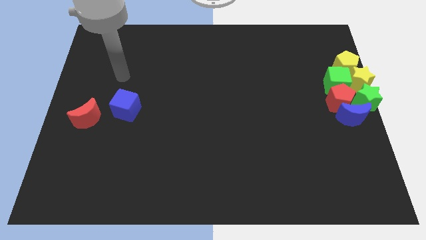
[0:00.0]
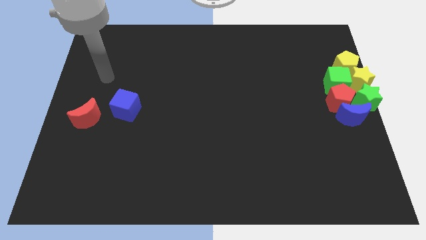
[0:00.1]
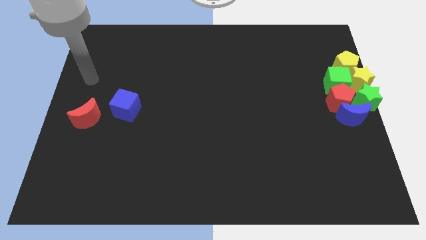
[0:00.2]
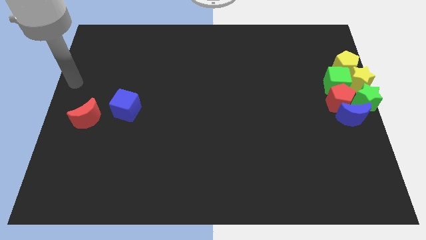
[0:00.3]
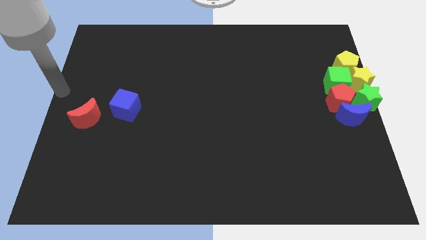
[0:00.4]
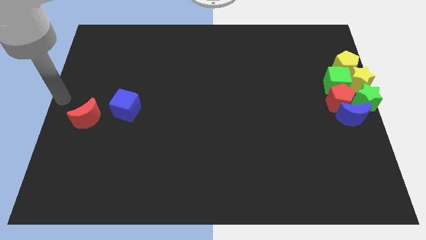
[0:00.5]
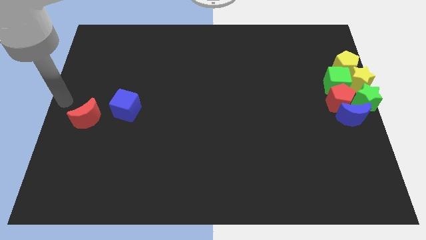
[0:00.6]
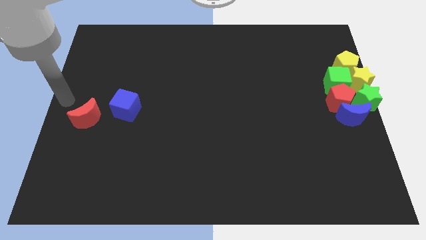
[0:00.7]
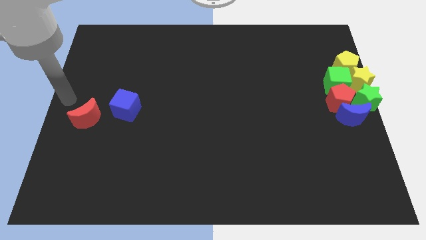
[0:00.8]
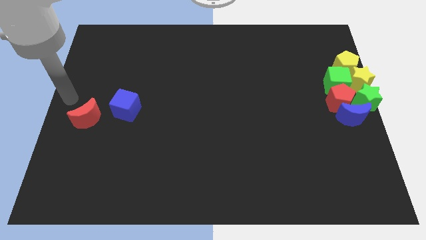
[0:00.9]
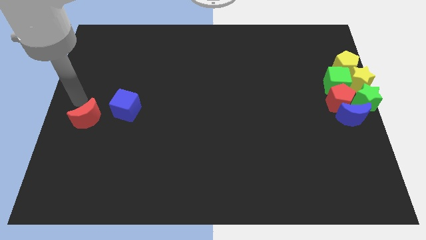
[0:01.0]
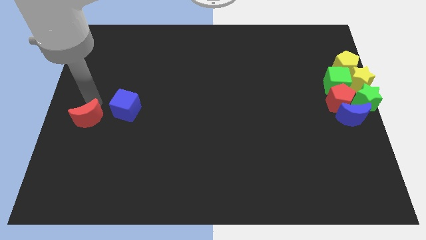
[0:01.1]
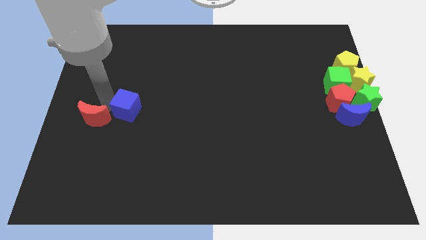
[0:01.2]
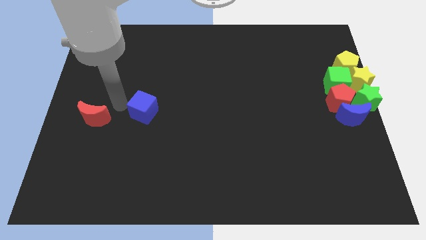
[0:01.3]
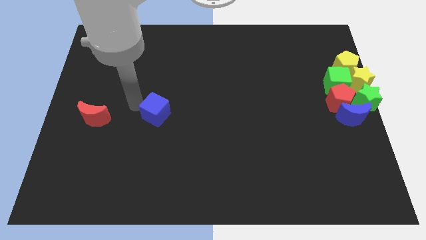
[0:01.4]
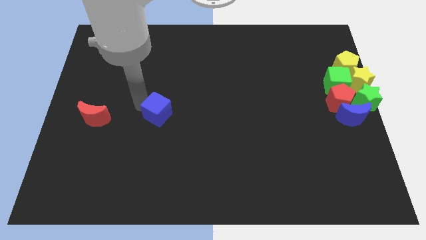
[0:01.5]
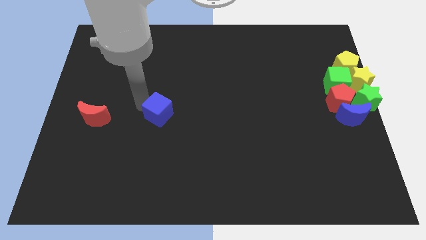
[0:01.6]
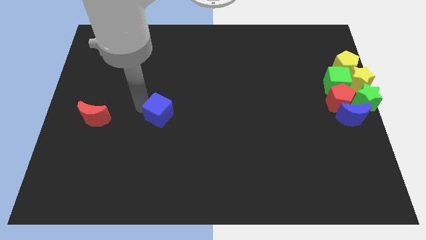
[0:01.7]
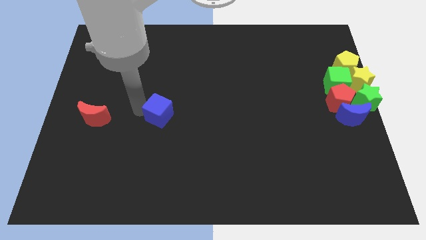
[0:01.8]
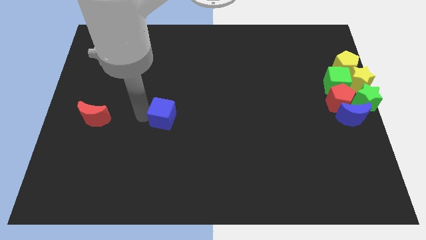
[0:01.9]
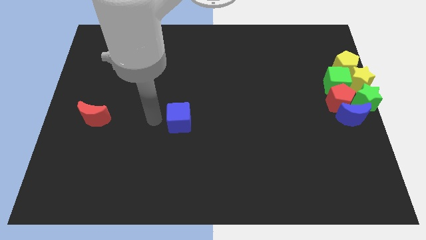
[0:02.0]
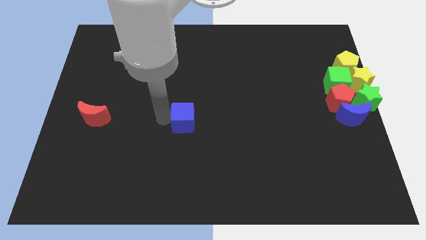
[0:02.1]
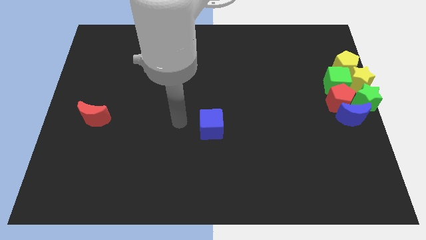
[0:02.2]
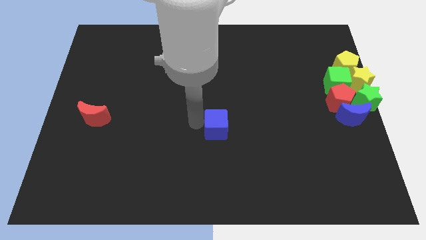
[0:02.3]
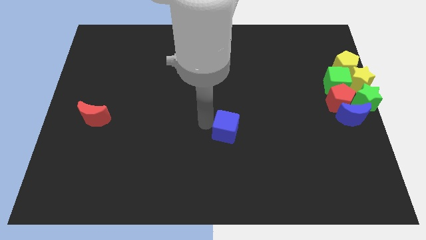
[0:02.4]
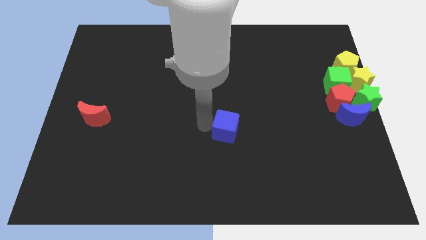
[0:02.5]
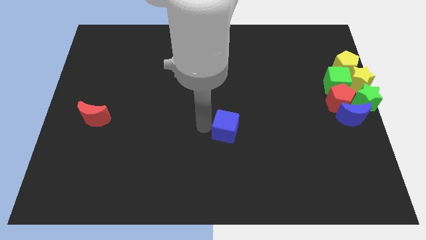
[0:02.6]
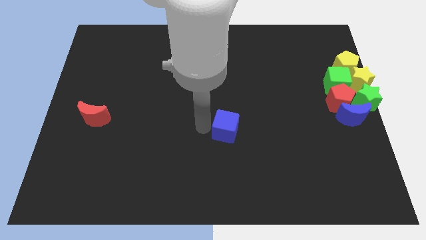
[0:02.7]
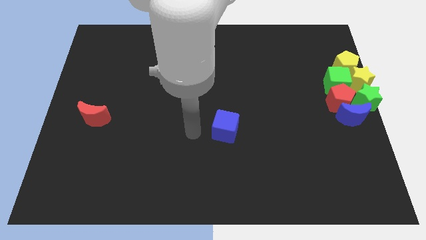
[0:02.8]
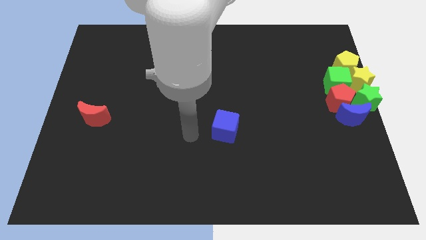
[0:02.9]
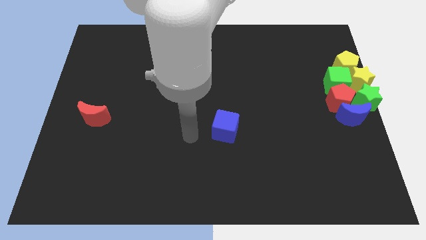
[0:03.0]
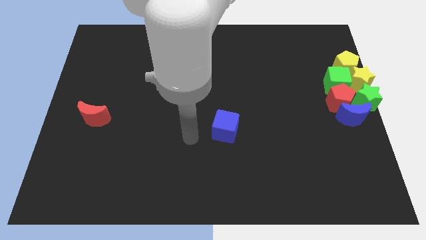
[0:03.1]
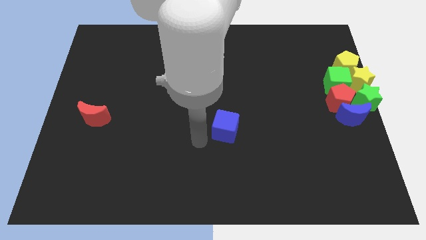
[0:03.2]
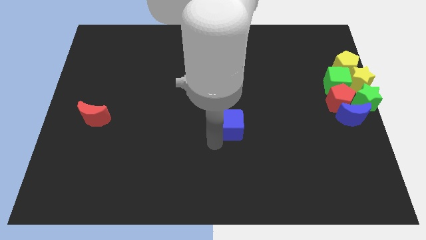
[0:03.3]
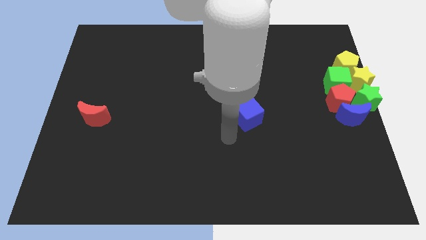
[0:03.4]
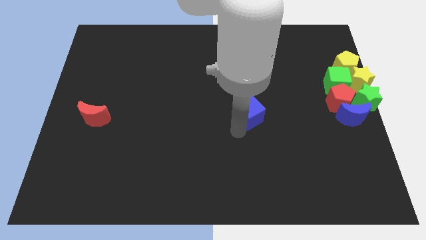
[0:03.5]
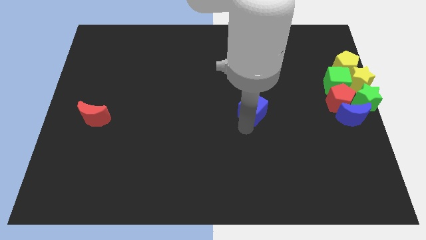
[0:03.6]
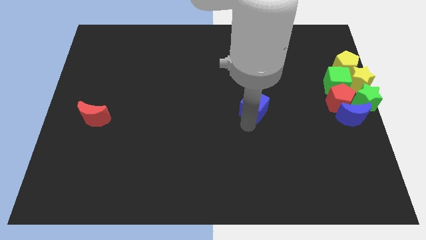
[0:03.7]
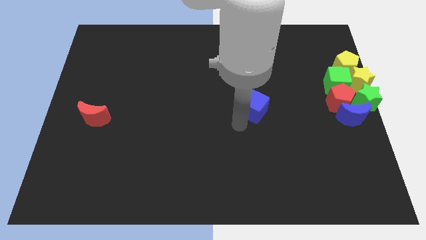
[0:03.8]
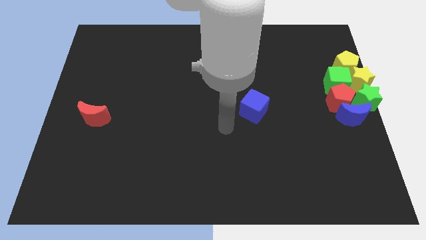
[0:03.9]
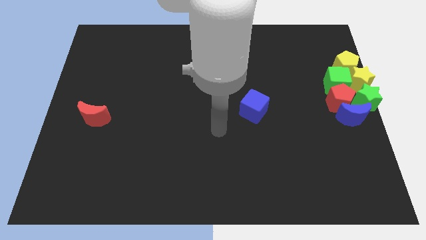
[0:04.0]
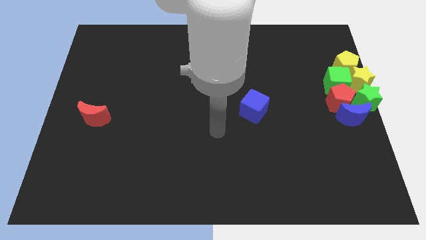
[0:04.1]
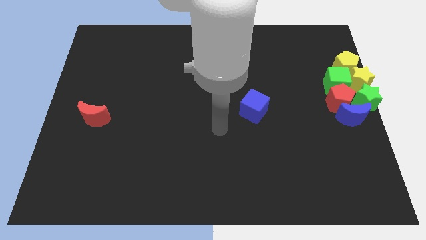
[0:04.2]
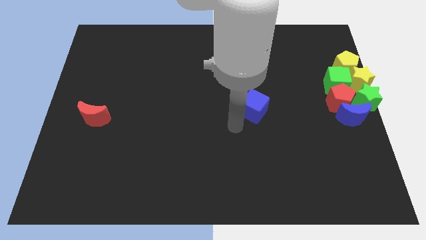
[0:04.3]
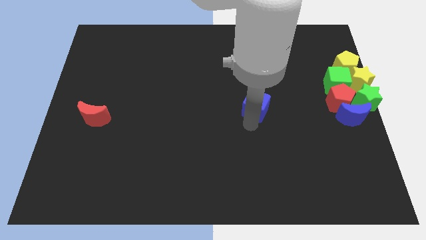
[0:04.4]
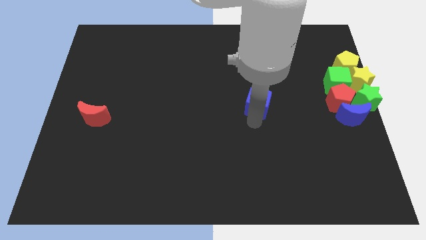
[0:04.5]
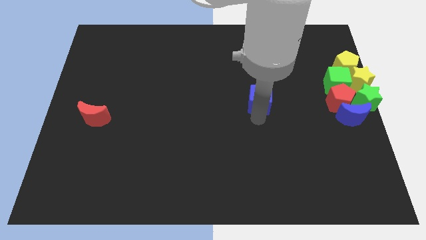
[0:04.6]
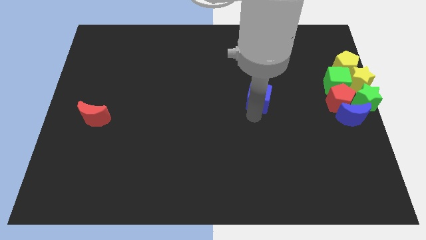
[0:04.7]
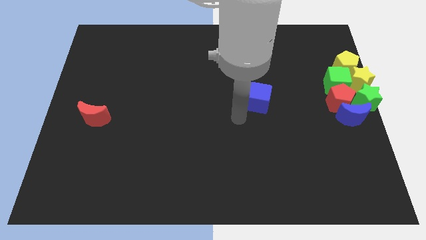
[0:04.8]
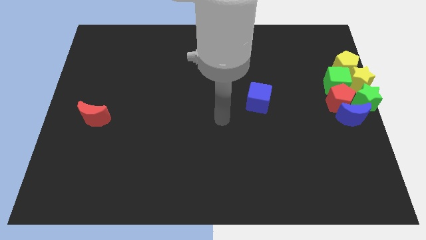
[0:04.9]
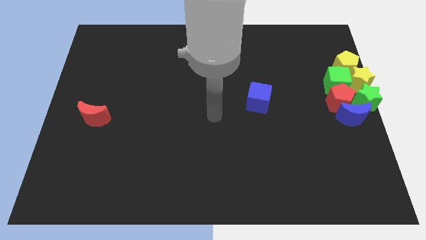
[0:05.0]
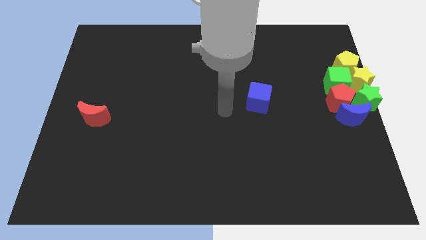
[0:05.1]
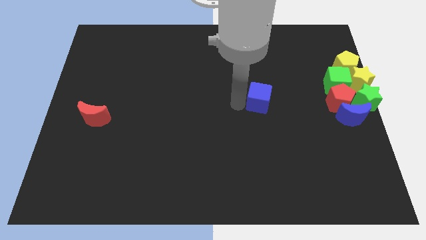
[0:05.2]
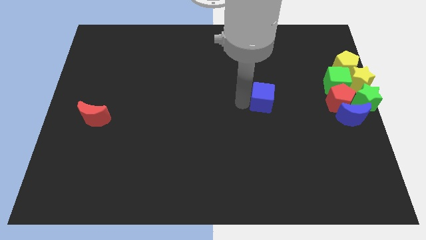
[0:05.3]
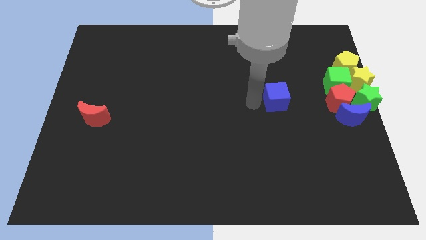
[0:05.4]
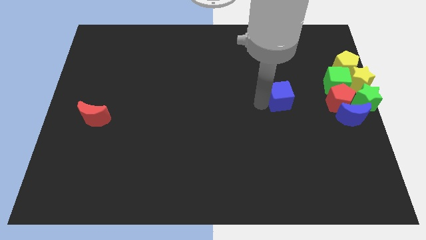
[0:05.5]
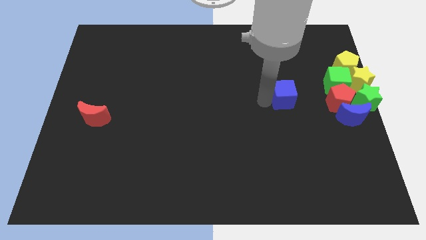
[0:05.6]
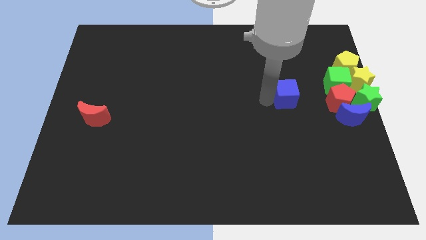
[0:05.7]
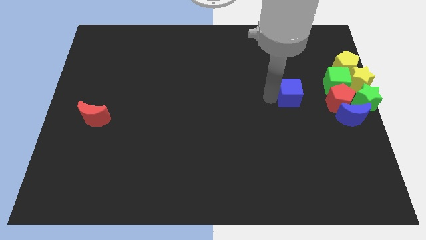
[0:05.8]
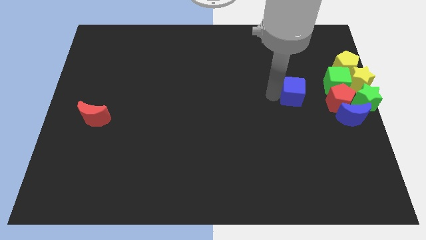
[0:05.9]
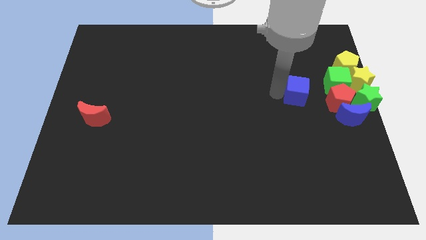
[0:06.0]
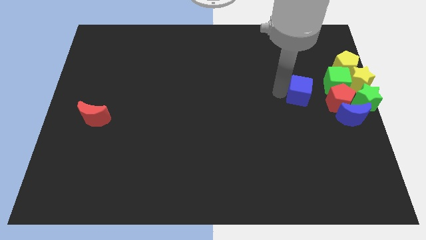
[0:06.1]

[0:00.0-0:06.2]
place the blue cube to the left of the green cube

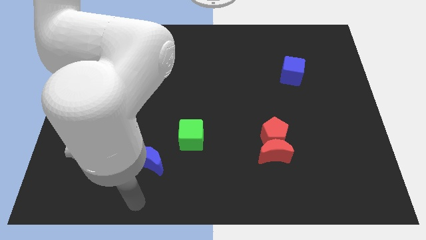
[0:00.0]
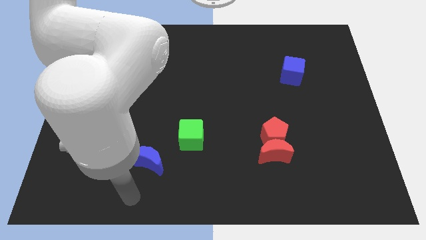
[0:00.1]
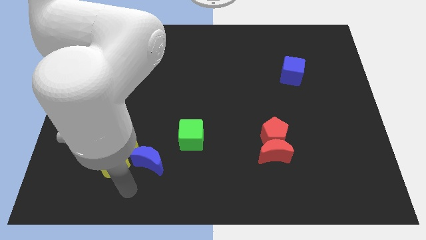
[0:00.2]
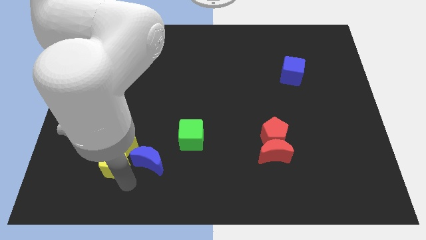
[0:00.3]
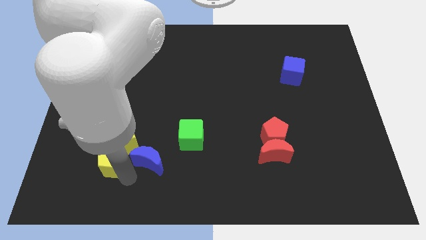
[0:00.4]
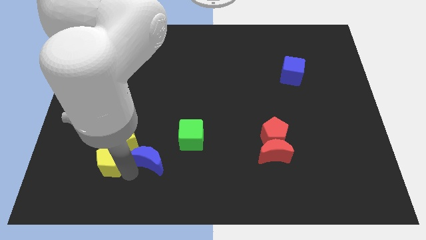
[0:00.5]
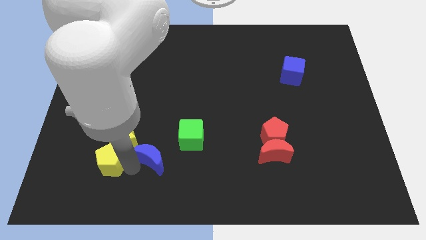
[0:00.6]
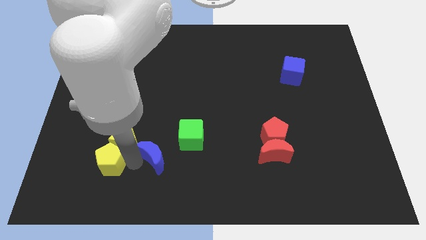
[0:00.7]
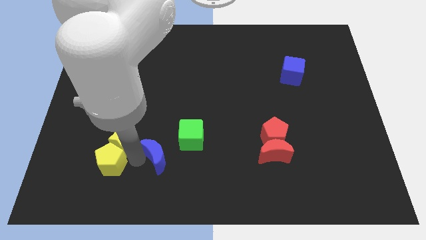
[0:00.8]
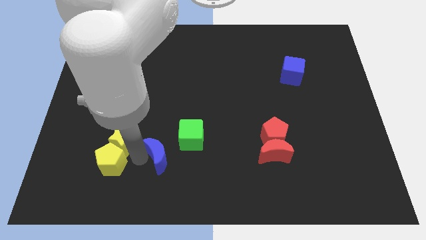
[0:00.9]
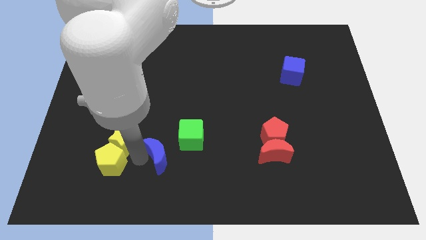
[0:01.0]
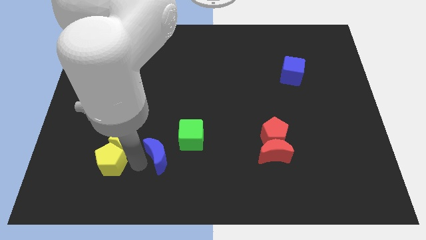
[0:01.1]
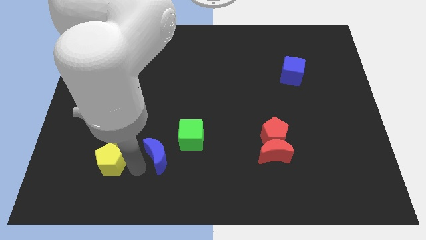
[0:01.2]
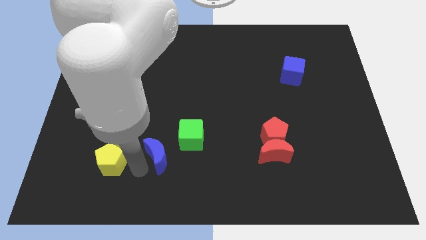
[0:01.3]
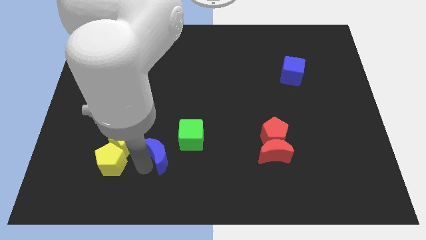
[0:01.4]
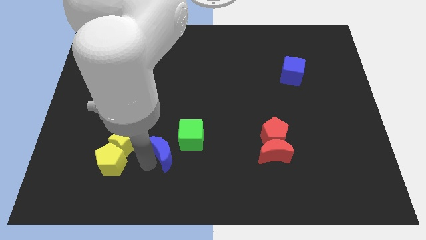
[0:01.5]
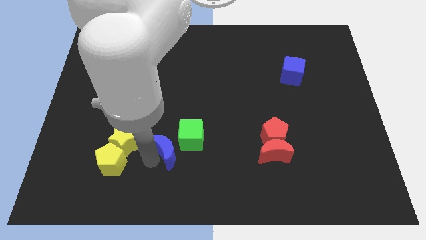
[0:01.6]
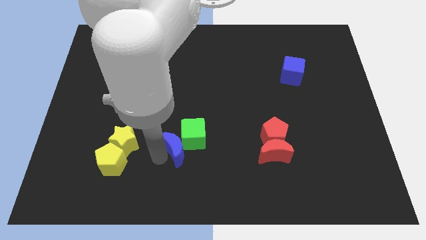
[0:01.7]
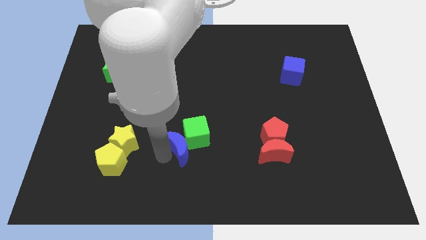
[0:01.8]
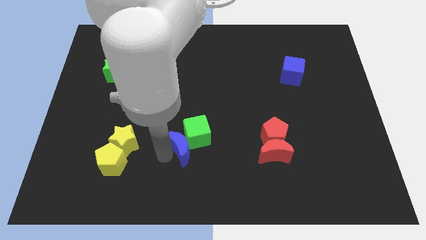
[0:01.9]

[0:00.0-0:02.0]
push the blue crescent towards green cube

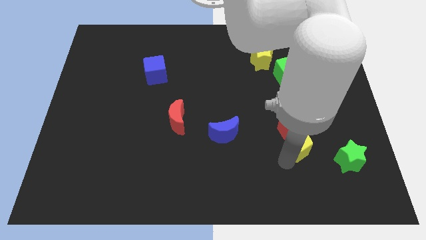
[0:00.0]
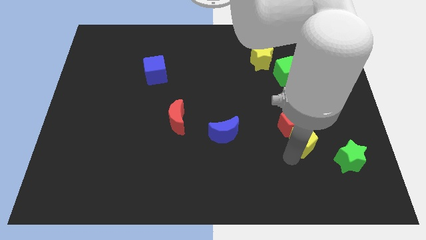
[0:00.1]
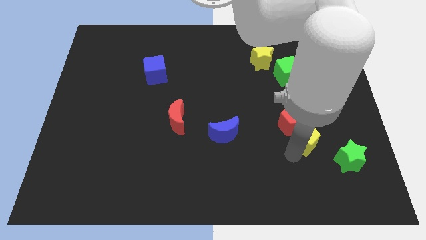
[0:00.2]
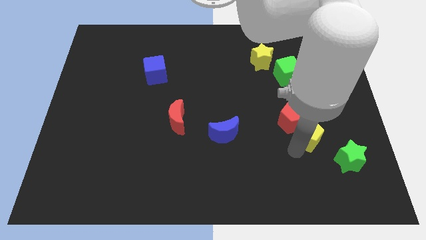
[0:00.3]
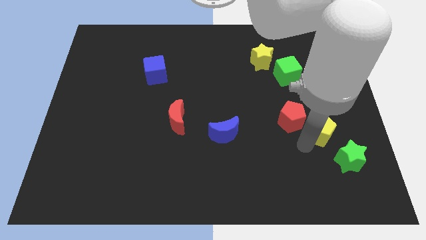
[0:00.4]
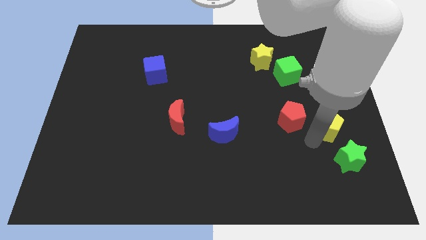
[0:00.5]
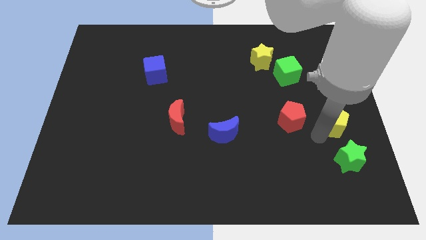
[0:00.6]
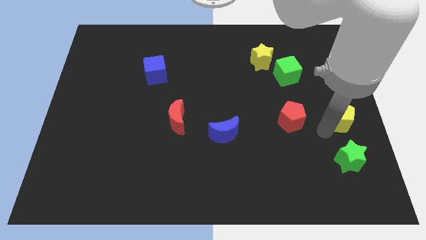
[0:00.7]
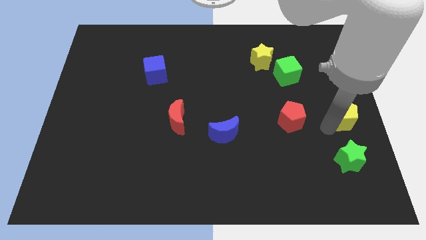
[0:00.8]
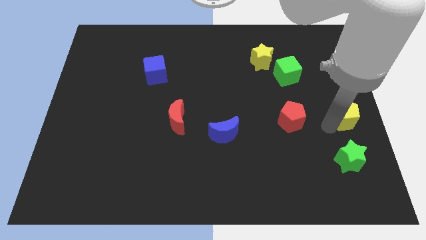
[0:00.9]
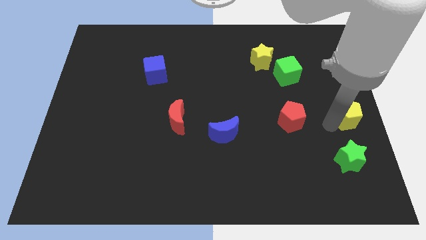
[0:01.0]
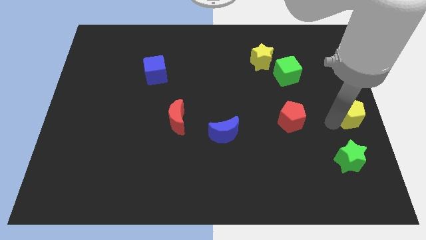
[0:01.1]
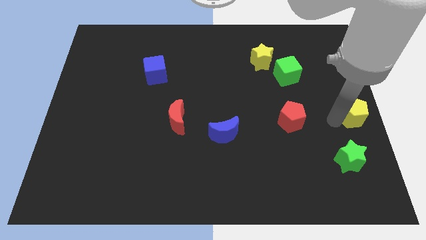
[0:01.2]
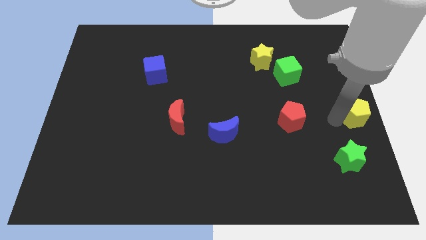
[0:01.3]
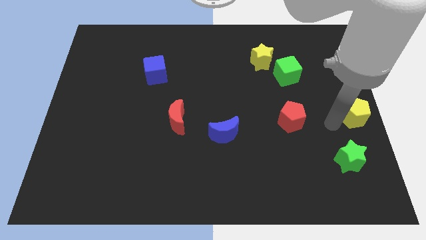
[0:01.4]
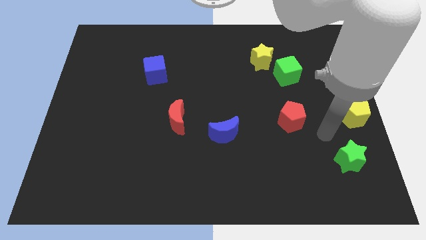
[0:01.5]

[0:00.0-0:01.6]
push the yellow pentagon to the right center of the board
